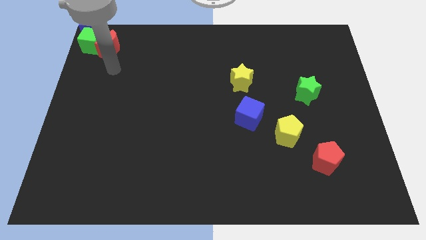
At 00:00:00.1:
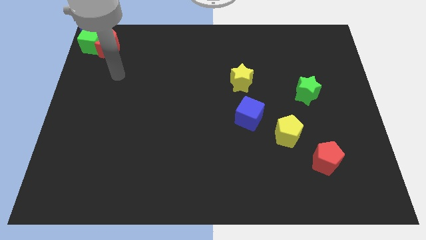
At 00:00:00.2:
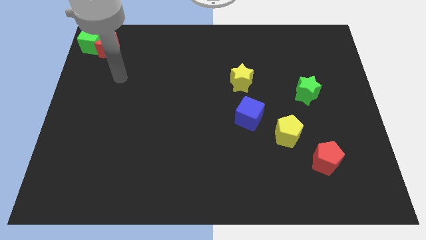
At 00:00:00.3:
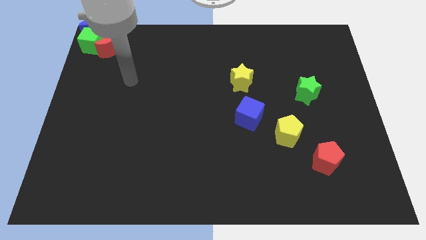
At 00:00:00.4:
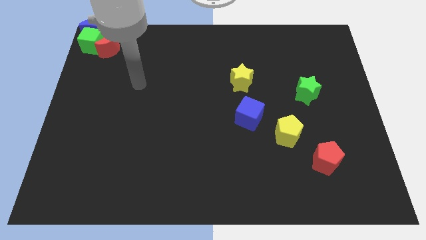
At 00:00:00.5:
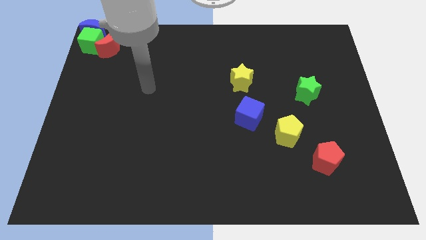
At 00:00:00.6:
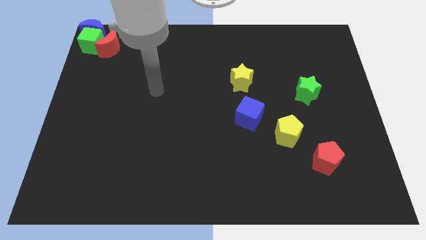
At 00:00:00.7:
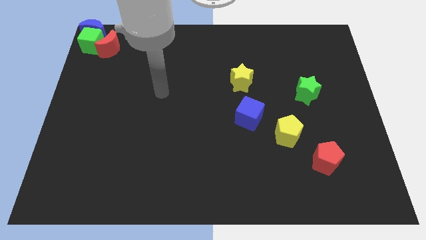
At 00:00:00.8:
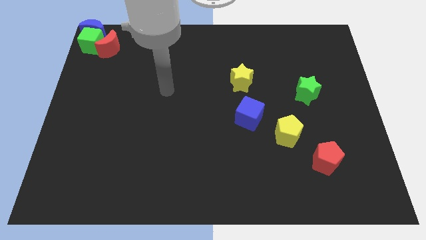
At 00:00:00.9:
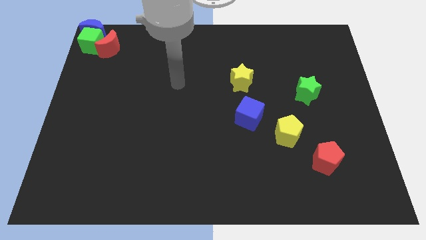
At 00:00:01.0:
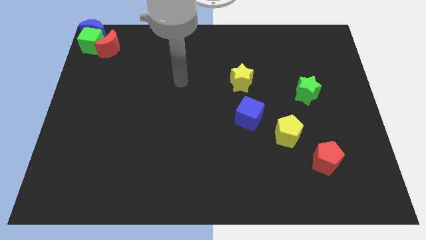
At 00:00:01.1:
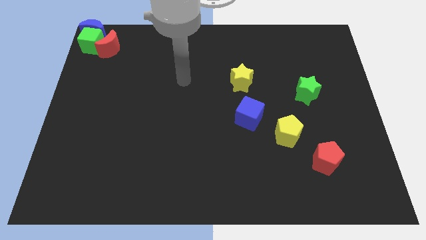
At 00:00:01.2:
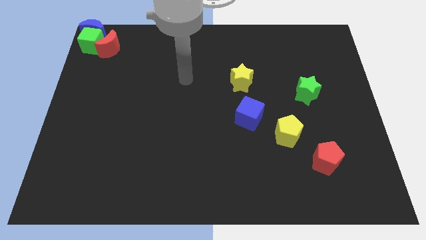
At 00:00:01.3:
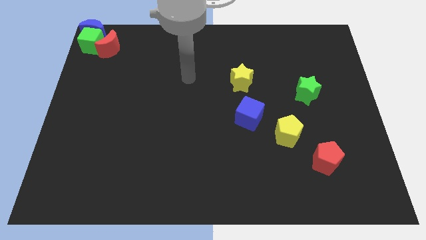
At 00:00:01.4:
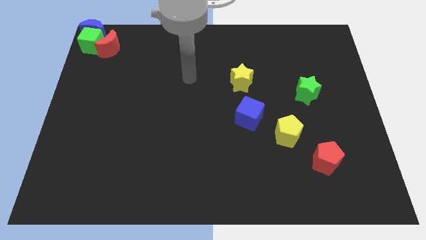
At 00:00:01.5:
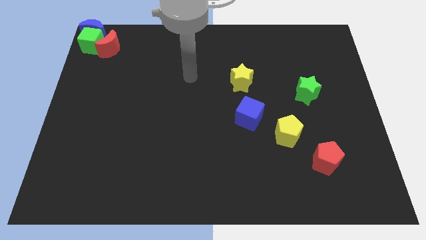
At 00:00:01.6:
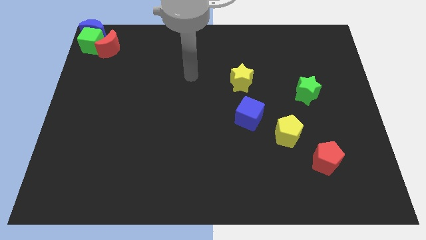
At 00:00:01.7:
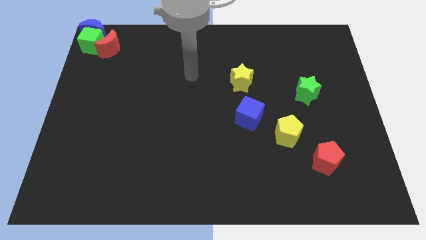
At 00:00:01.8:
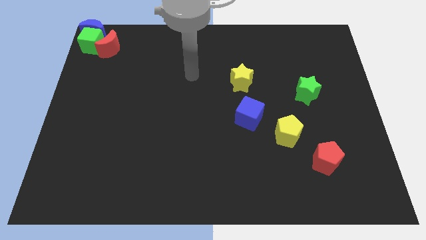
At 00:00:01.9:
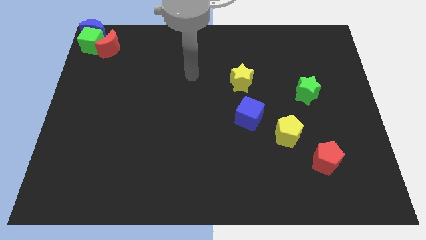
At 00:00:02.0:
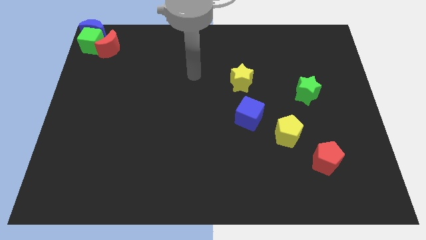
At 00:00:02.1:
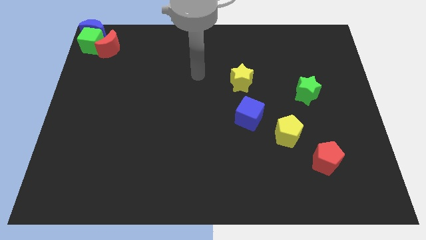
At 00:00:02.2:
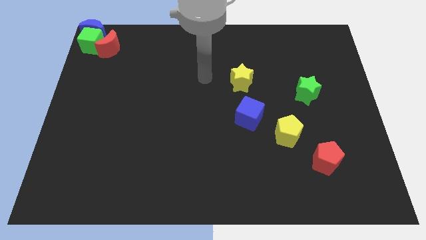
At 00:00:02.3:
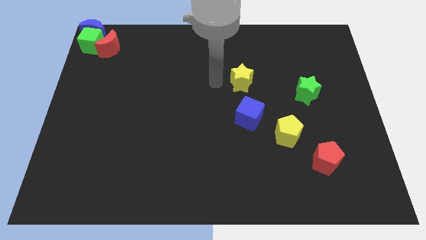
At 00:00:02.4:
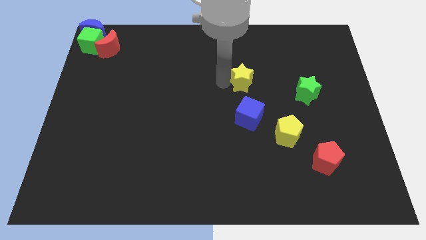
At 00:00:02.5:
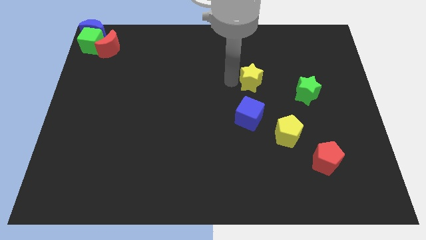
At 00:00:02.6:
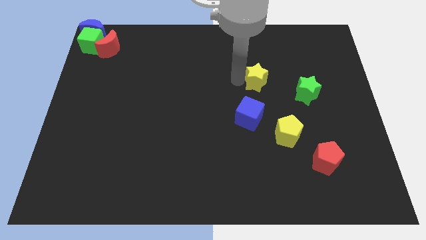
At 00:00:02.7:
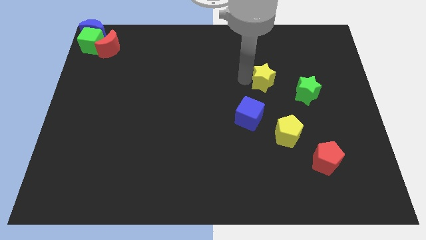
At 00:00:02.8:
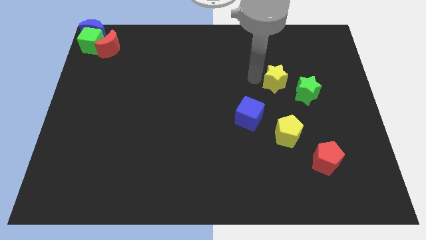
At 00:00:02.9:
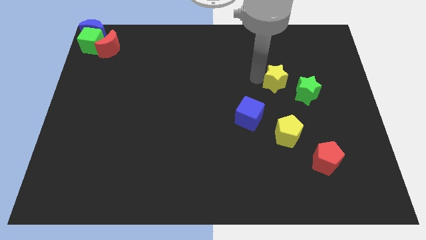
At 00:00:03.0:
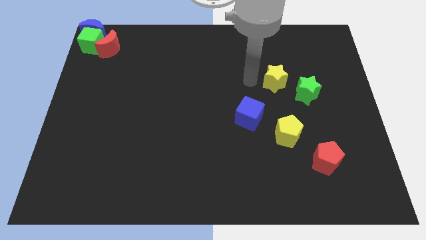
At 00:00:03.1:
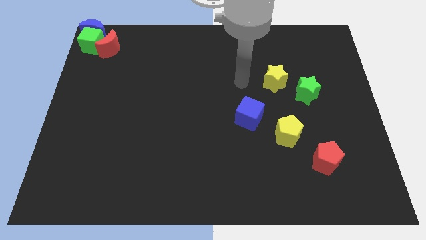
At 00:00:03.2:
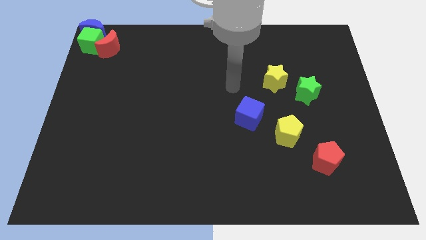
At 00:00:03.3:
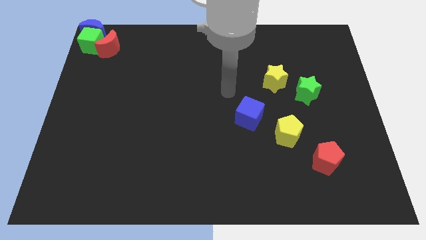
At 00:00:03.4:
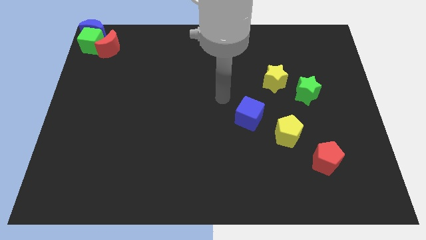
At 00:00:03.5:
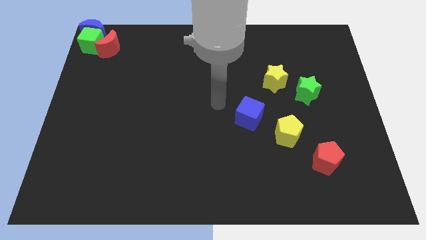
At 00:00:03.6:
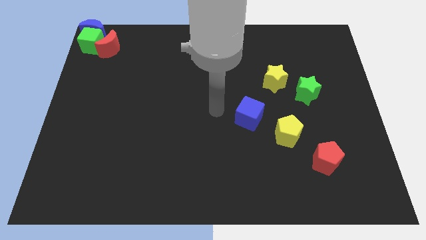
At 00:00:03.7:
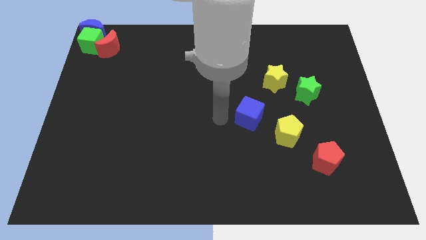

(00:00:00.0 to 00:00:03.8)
move the yellow star to the top left side of the green star

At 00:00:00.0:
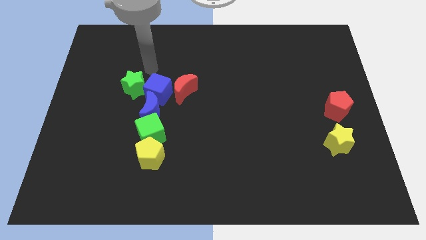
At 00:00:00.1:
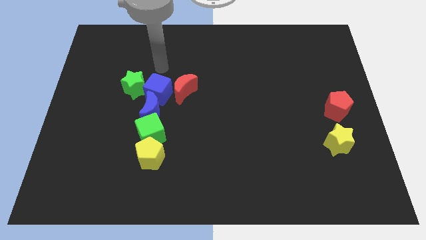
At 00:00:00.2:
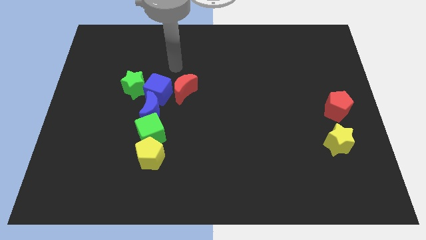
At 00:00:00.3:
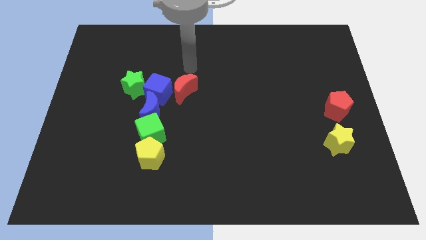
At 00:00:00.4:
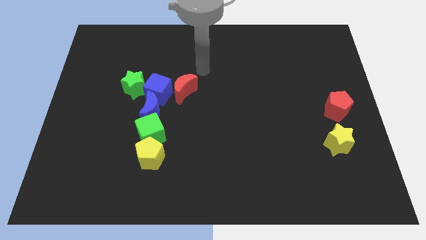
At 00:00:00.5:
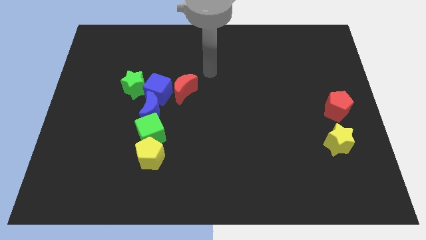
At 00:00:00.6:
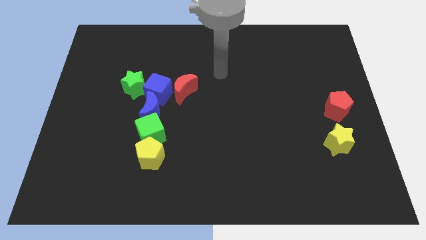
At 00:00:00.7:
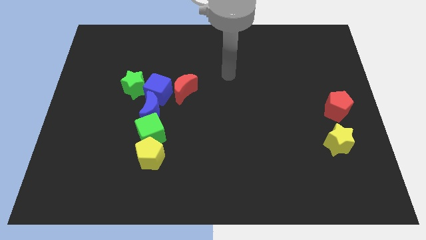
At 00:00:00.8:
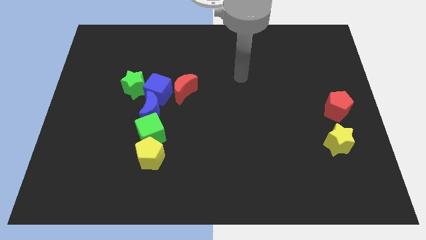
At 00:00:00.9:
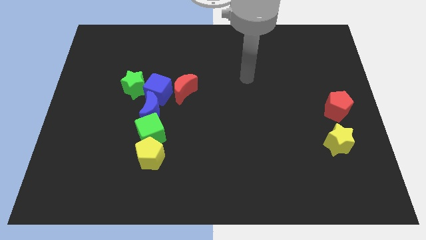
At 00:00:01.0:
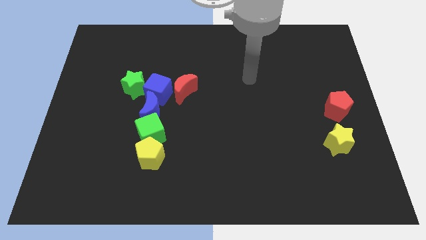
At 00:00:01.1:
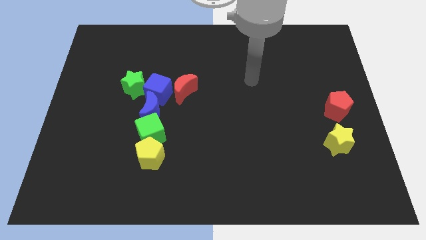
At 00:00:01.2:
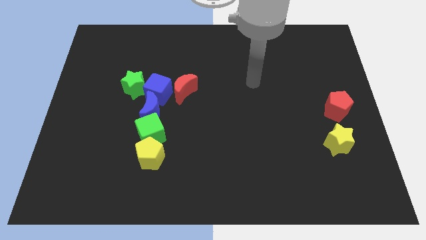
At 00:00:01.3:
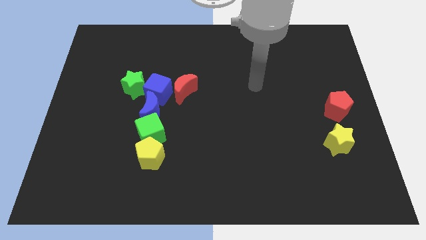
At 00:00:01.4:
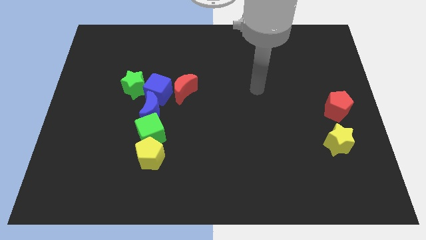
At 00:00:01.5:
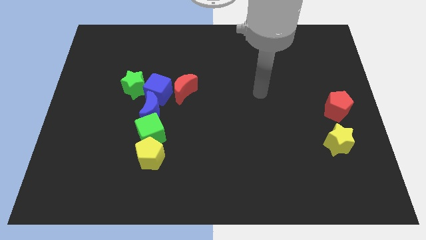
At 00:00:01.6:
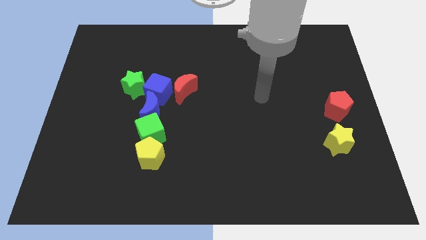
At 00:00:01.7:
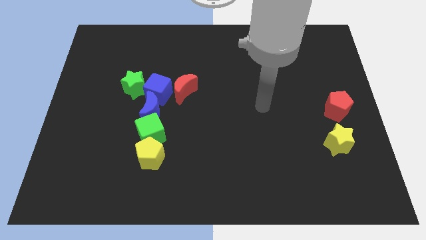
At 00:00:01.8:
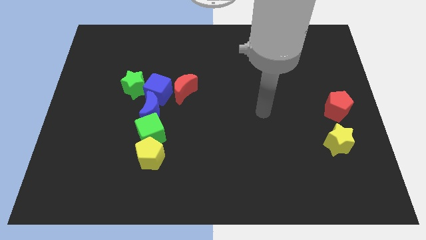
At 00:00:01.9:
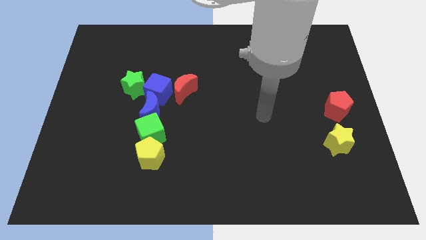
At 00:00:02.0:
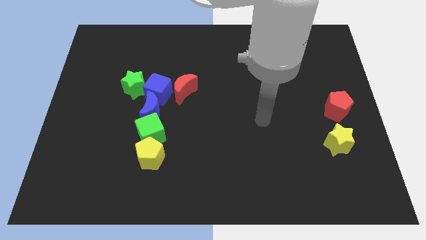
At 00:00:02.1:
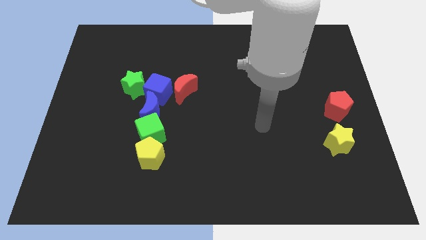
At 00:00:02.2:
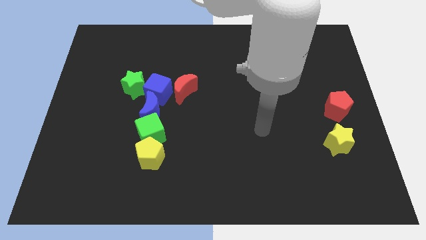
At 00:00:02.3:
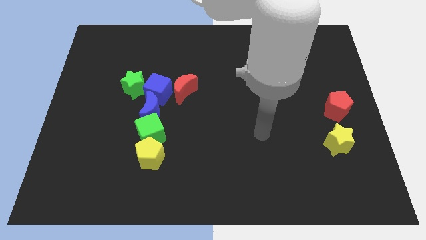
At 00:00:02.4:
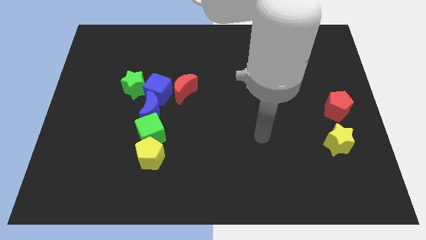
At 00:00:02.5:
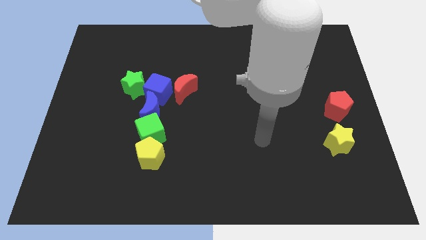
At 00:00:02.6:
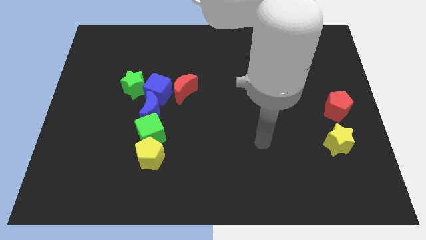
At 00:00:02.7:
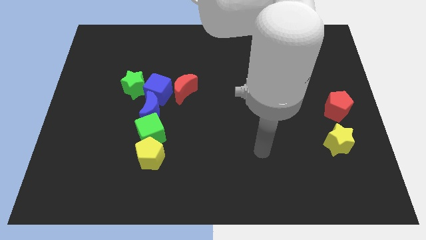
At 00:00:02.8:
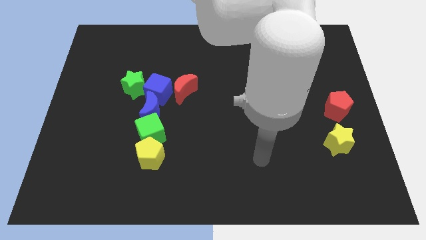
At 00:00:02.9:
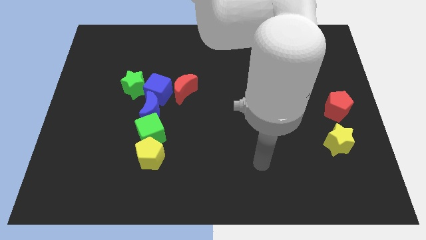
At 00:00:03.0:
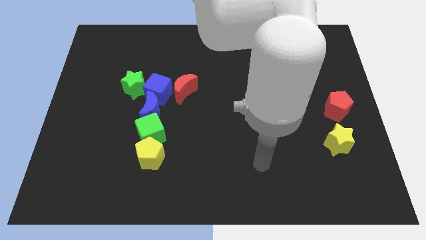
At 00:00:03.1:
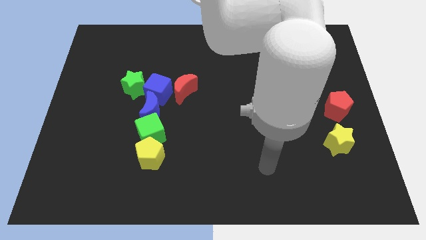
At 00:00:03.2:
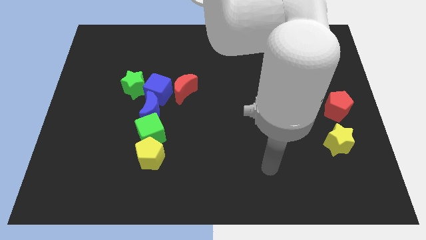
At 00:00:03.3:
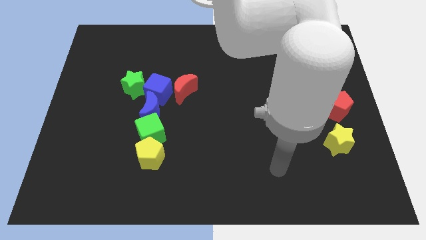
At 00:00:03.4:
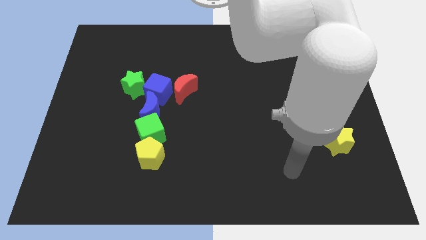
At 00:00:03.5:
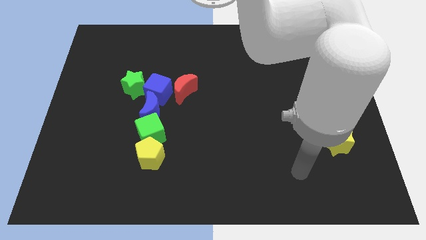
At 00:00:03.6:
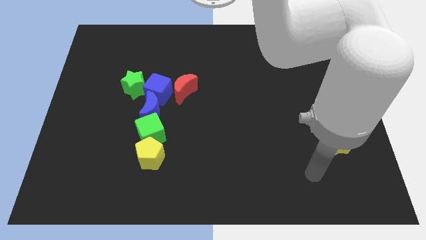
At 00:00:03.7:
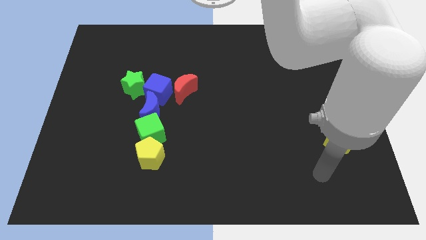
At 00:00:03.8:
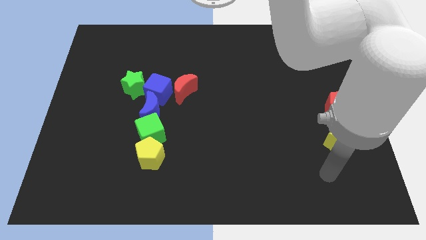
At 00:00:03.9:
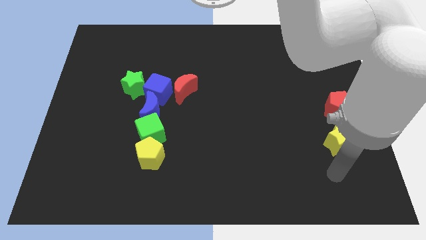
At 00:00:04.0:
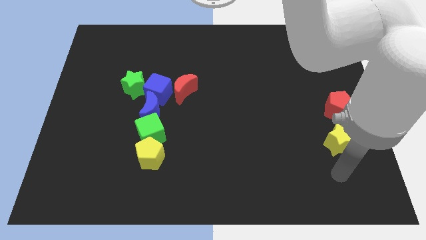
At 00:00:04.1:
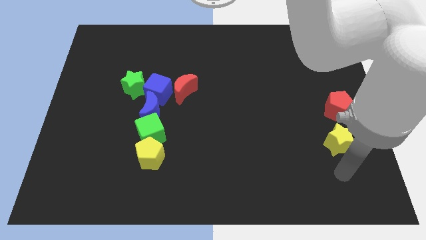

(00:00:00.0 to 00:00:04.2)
move your arm below the yellow star

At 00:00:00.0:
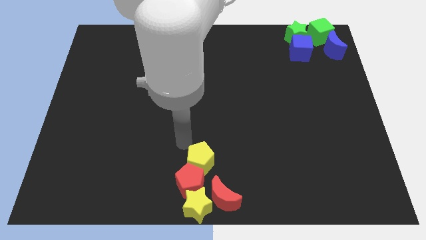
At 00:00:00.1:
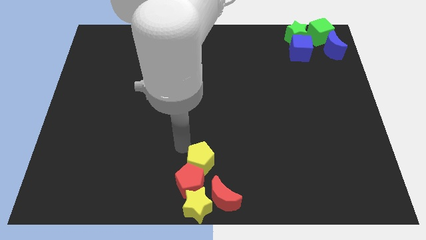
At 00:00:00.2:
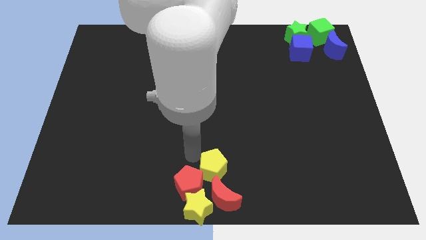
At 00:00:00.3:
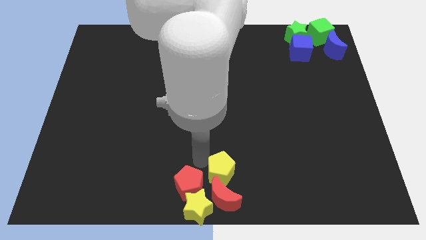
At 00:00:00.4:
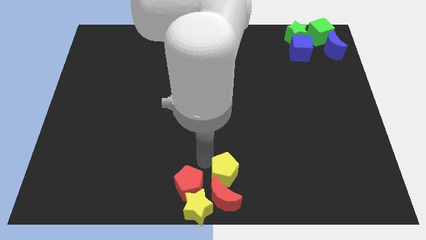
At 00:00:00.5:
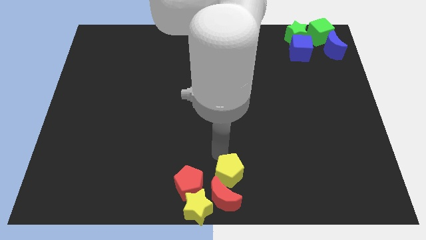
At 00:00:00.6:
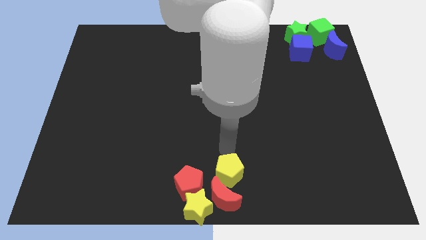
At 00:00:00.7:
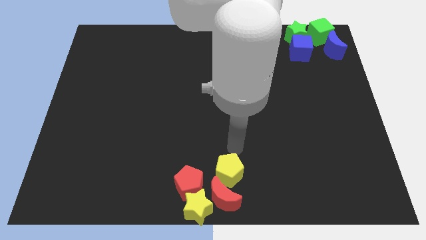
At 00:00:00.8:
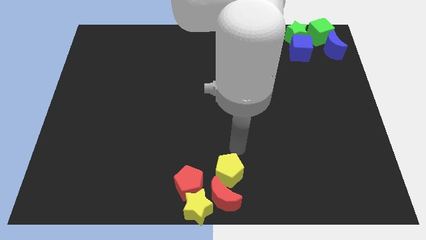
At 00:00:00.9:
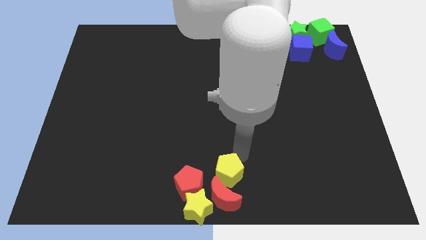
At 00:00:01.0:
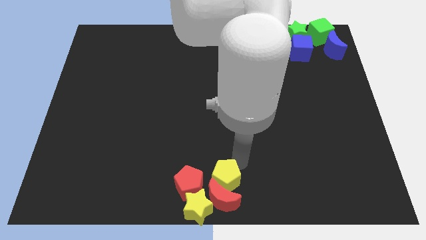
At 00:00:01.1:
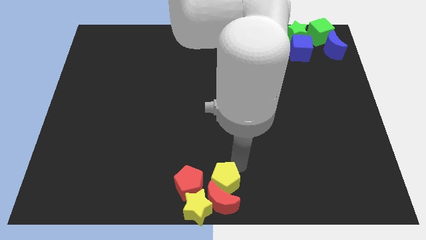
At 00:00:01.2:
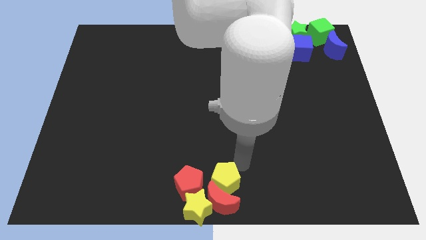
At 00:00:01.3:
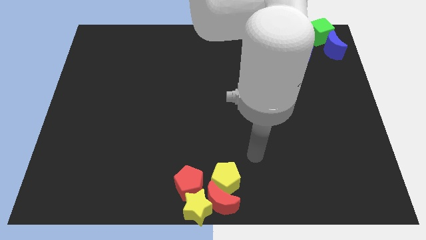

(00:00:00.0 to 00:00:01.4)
push yellow pentagon into group of blocks
